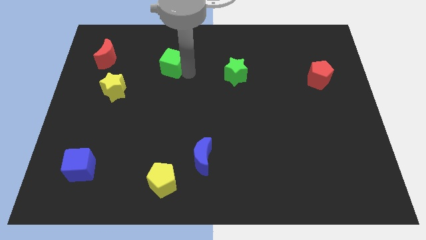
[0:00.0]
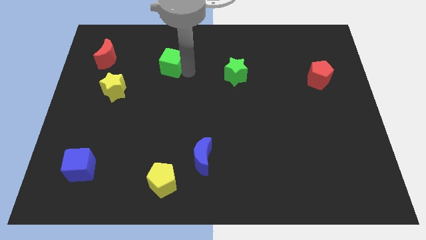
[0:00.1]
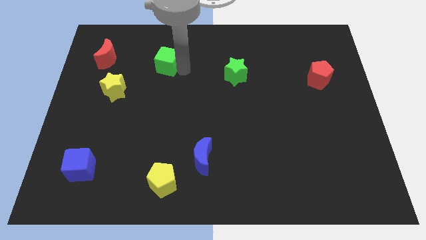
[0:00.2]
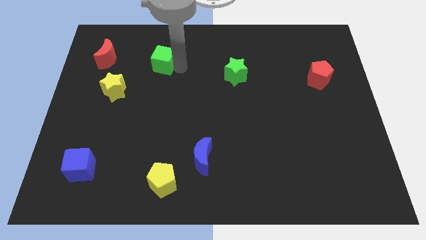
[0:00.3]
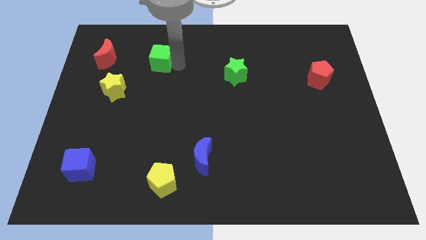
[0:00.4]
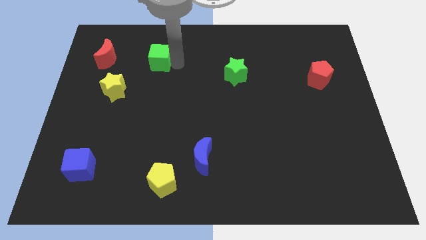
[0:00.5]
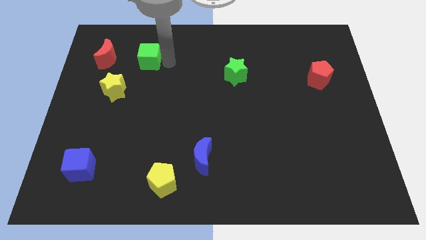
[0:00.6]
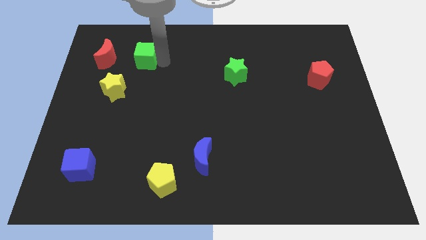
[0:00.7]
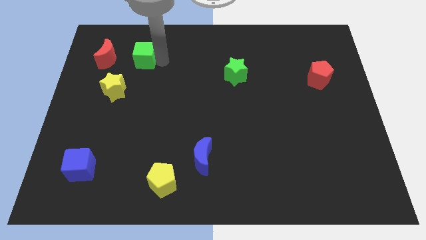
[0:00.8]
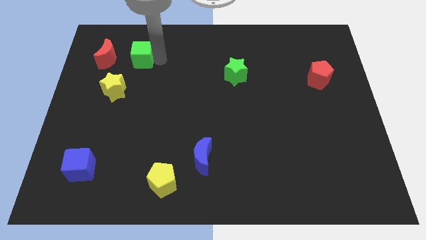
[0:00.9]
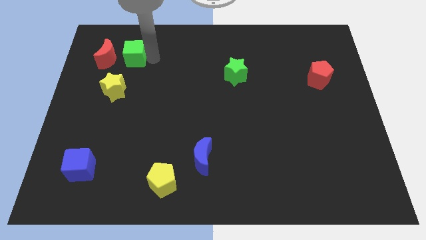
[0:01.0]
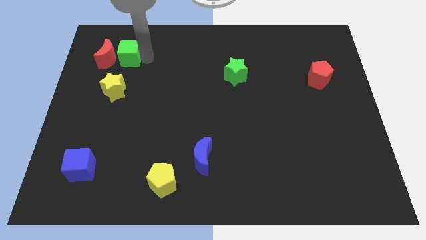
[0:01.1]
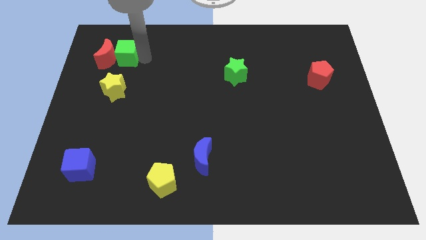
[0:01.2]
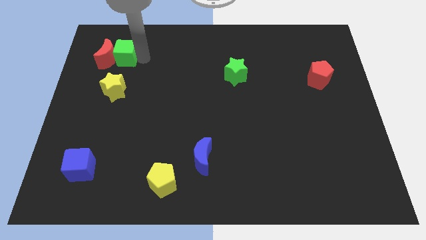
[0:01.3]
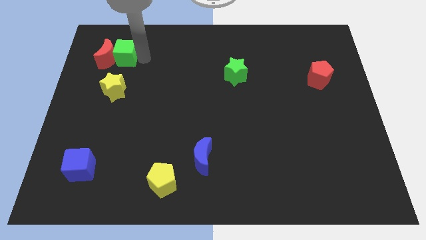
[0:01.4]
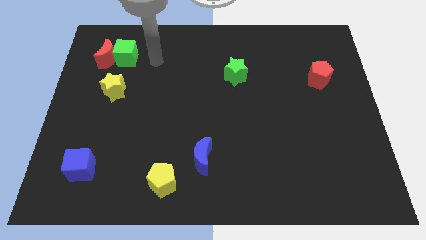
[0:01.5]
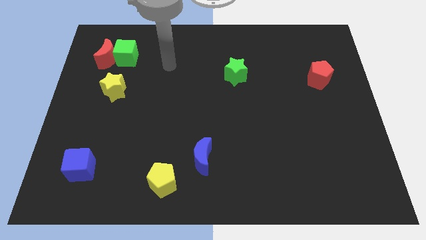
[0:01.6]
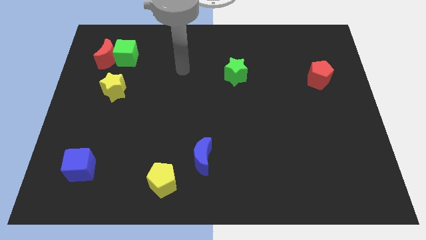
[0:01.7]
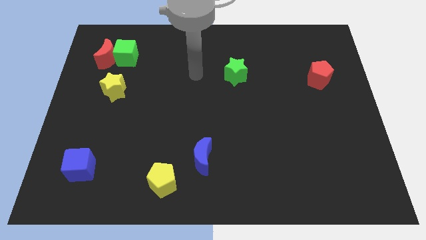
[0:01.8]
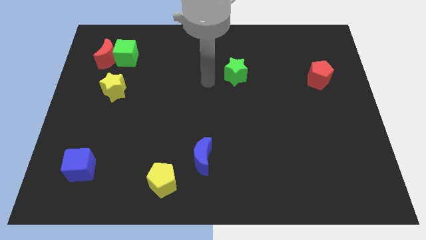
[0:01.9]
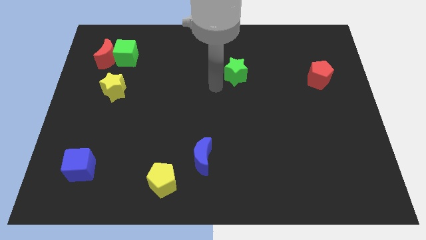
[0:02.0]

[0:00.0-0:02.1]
move the green cube to the right side of red crescent

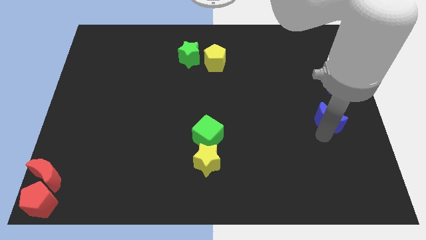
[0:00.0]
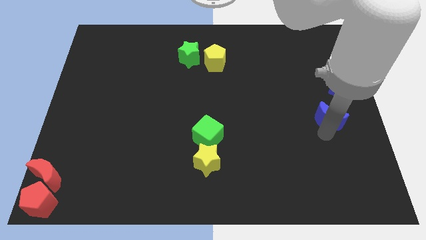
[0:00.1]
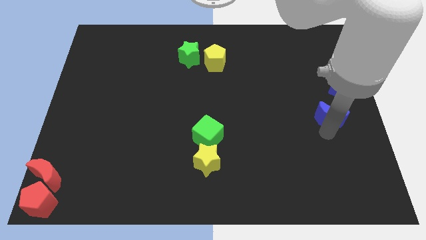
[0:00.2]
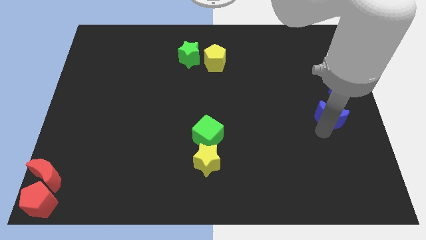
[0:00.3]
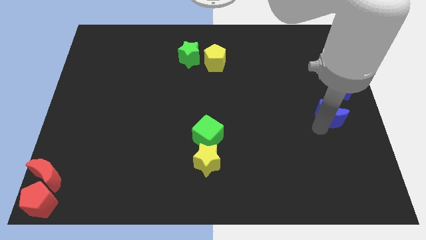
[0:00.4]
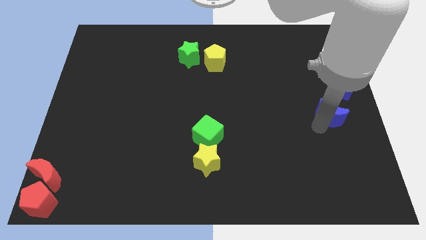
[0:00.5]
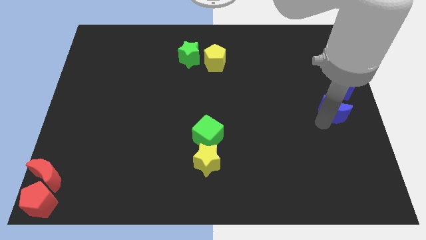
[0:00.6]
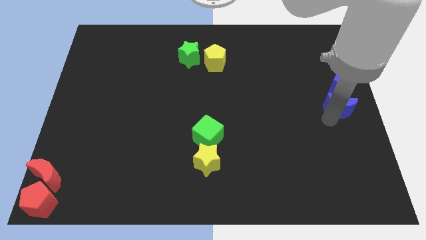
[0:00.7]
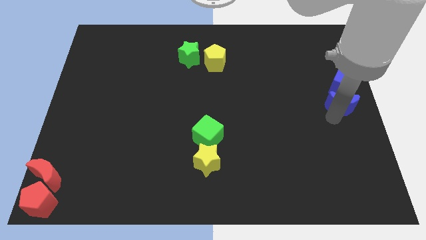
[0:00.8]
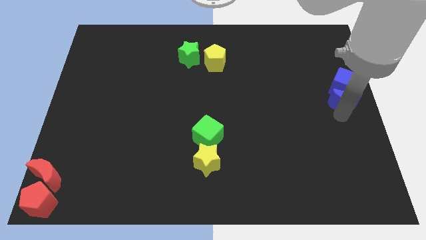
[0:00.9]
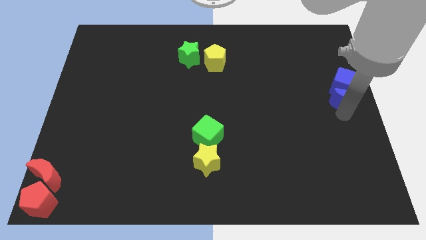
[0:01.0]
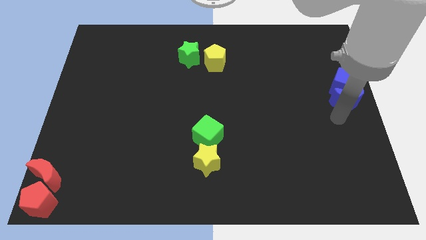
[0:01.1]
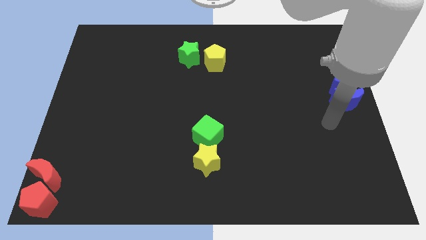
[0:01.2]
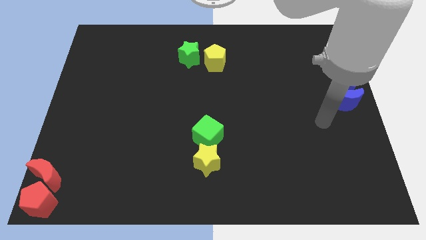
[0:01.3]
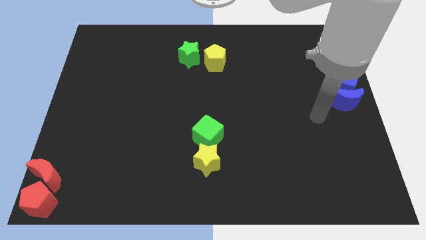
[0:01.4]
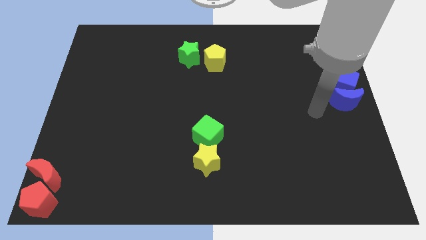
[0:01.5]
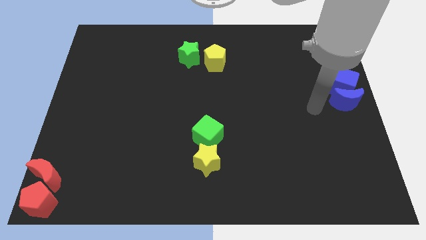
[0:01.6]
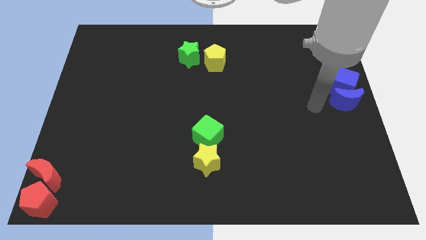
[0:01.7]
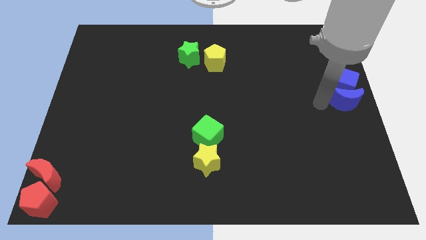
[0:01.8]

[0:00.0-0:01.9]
move the blue crescent towards the bottom of the blue cube

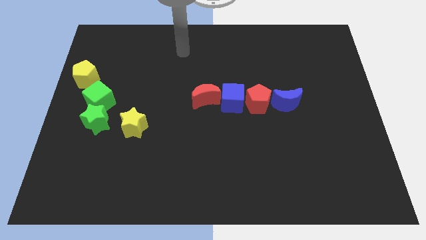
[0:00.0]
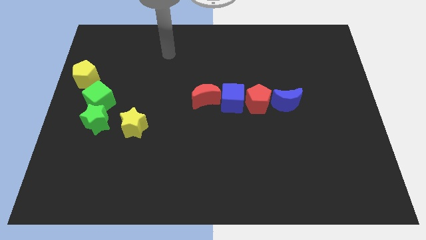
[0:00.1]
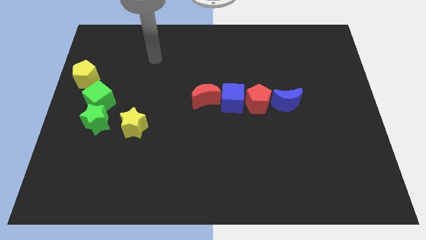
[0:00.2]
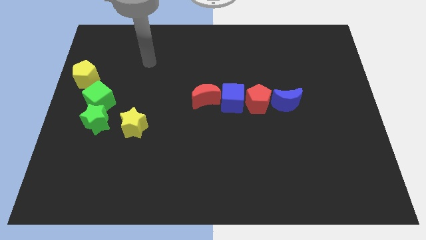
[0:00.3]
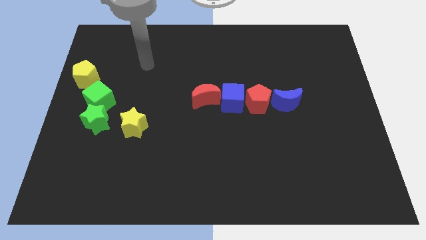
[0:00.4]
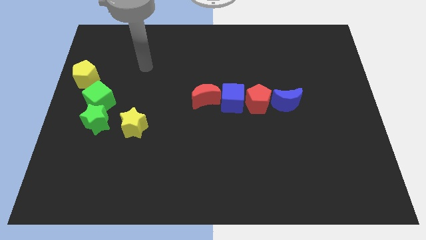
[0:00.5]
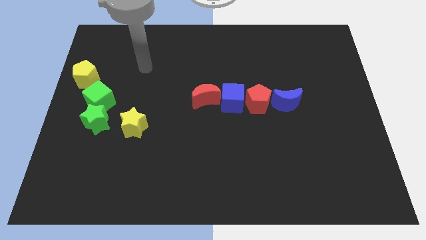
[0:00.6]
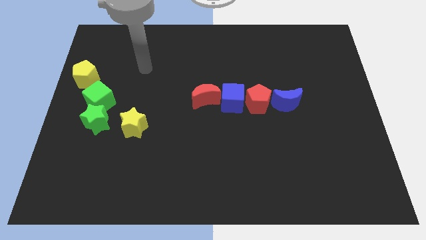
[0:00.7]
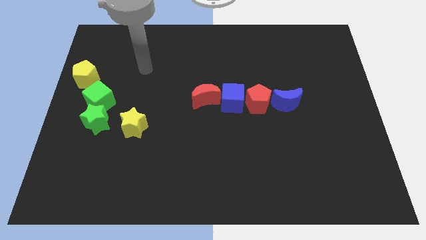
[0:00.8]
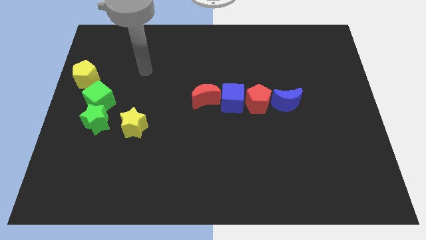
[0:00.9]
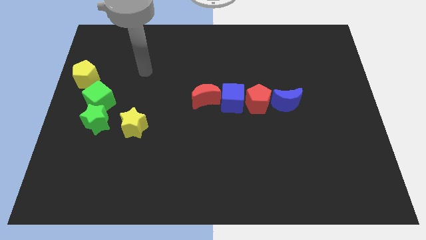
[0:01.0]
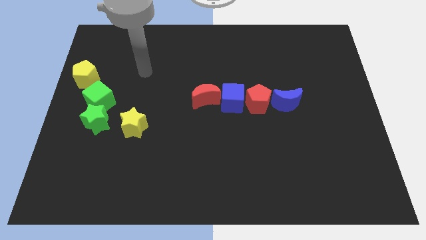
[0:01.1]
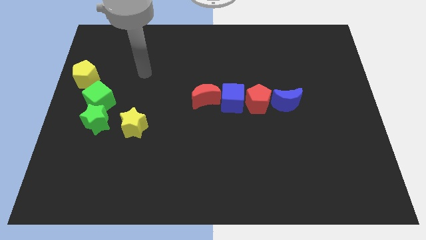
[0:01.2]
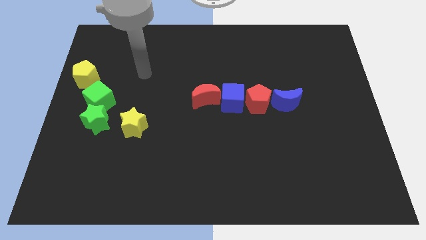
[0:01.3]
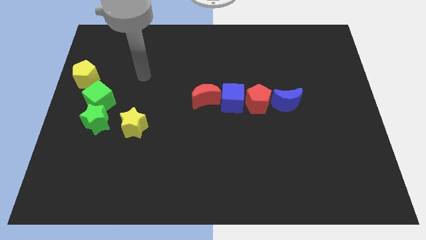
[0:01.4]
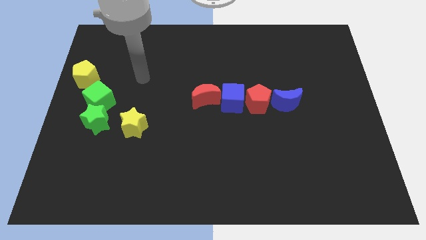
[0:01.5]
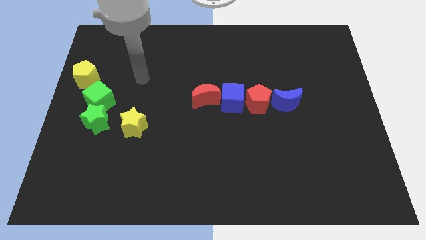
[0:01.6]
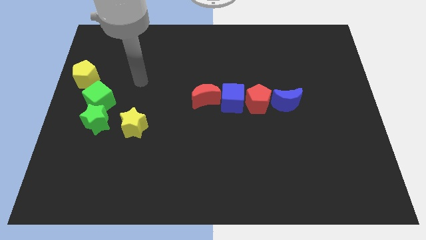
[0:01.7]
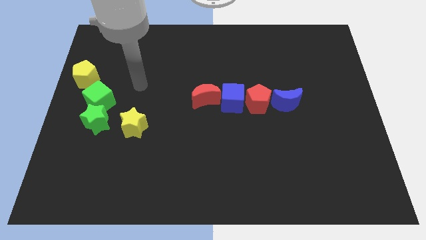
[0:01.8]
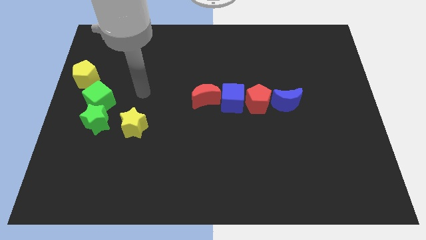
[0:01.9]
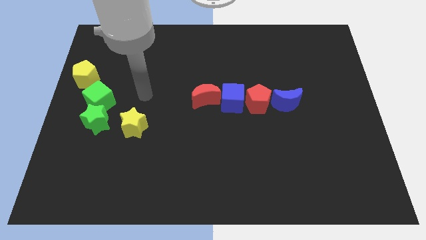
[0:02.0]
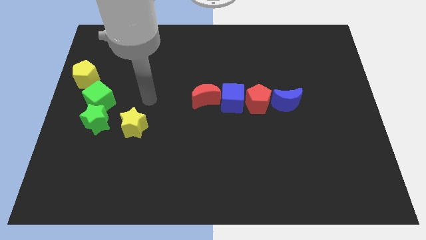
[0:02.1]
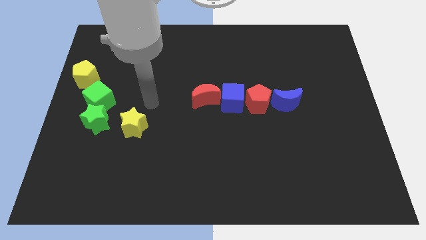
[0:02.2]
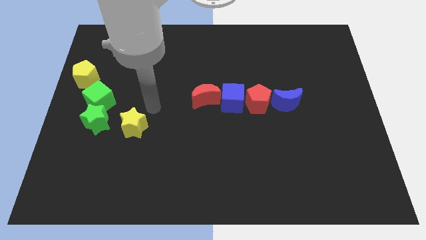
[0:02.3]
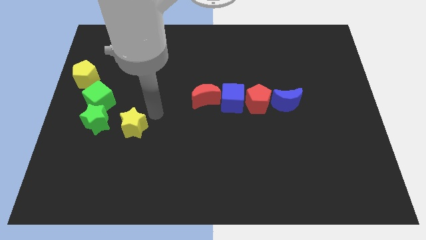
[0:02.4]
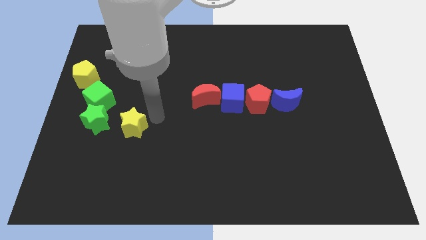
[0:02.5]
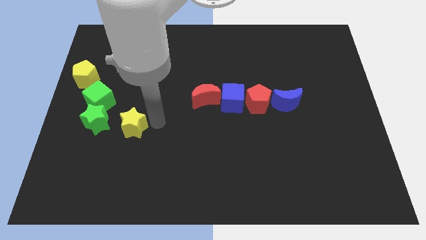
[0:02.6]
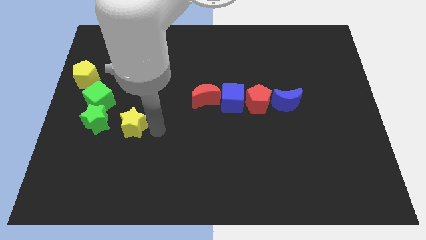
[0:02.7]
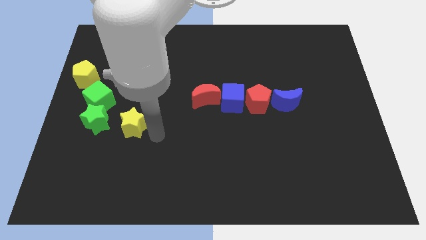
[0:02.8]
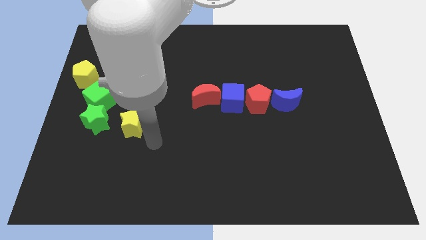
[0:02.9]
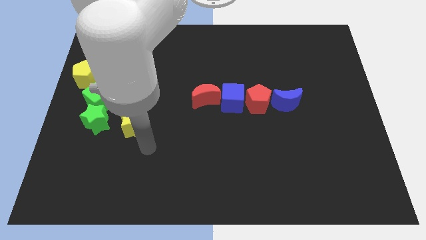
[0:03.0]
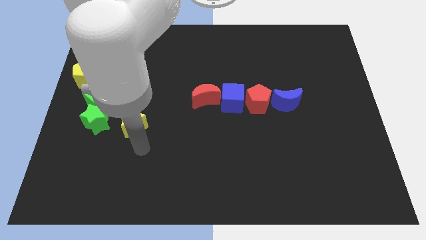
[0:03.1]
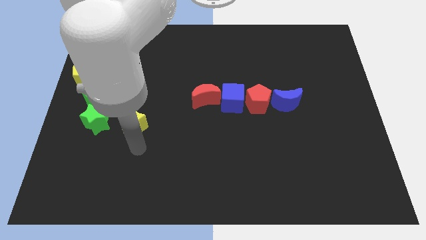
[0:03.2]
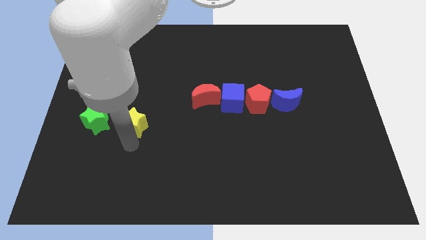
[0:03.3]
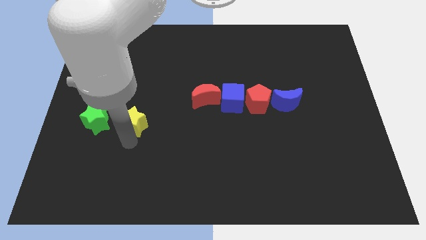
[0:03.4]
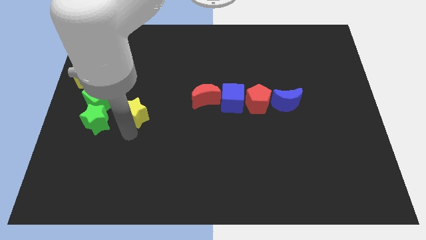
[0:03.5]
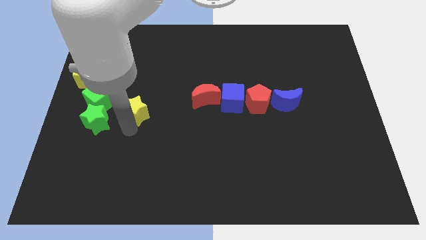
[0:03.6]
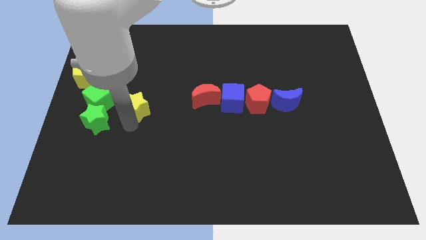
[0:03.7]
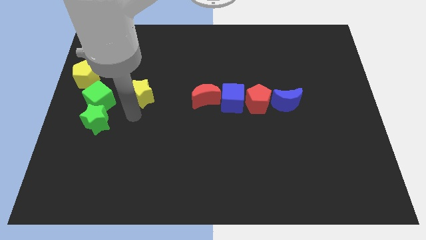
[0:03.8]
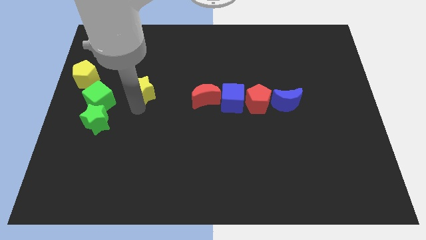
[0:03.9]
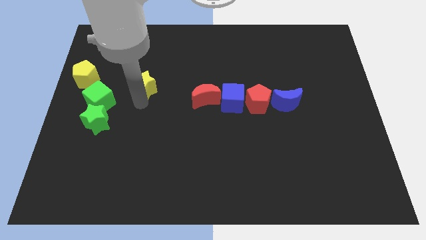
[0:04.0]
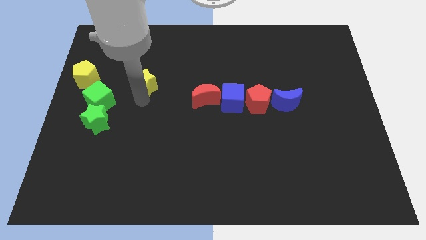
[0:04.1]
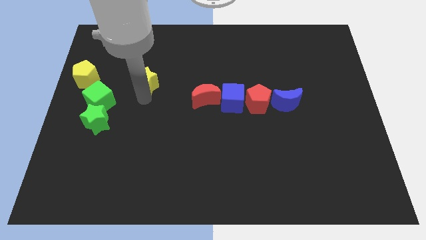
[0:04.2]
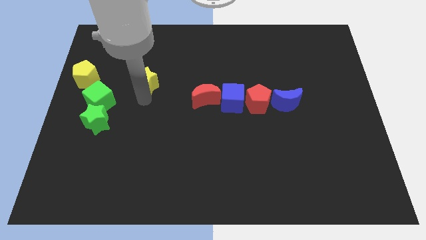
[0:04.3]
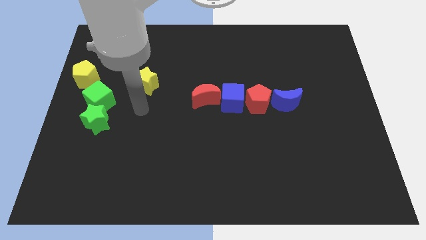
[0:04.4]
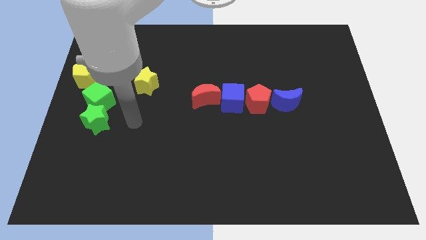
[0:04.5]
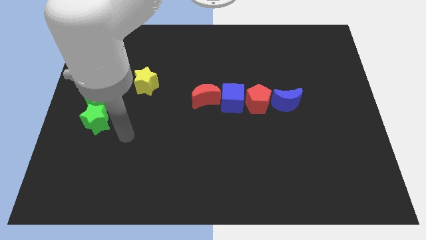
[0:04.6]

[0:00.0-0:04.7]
push yellow star upwards

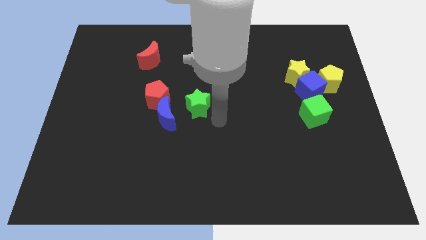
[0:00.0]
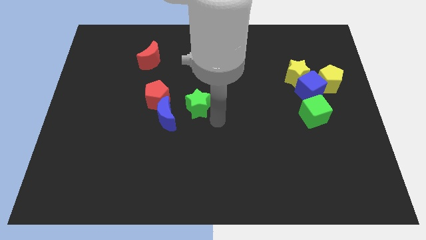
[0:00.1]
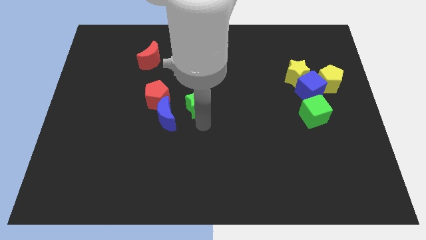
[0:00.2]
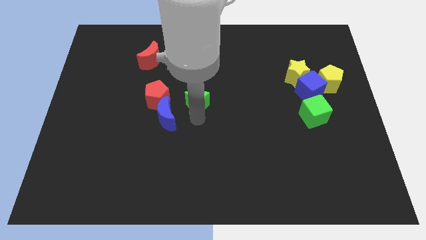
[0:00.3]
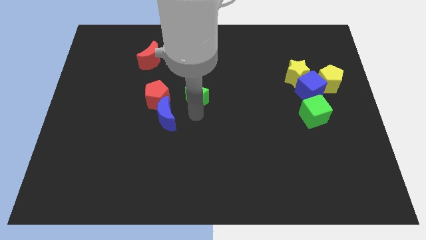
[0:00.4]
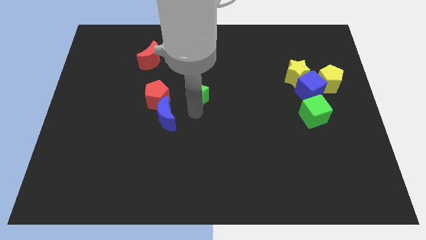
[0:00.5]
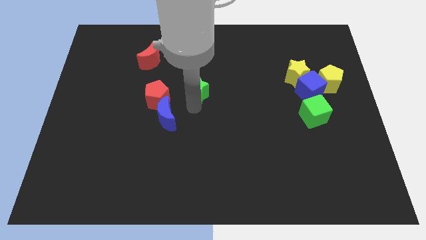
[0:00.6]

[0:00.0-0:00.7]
place green star to the right of red pentagon
